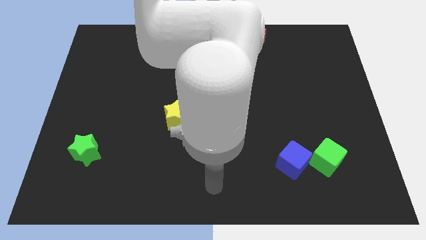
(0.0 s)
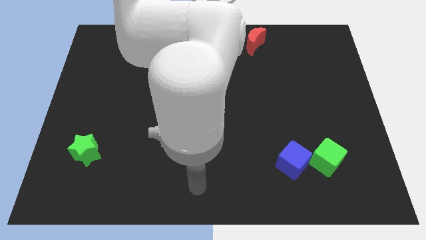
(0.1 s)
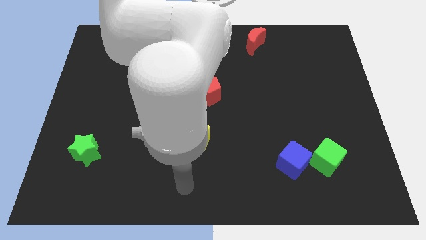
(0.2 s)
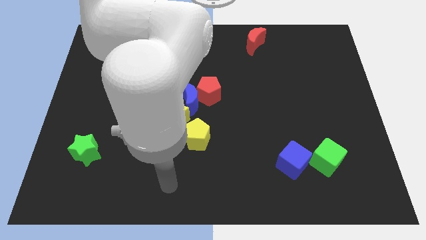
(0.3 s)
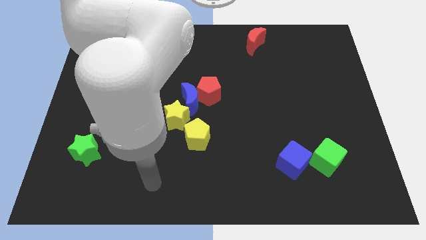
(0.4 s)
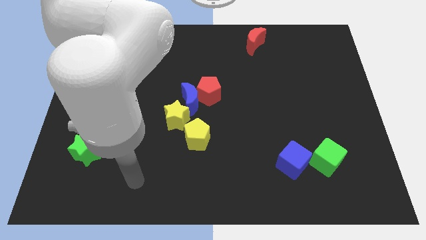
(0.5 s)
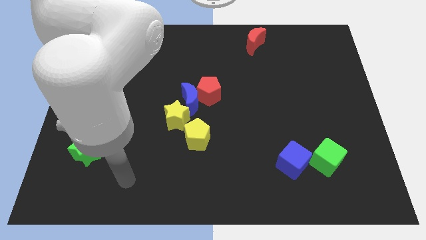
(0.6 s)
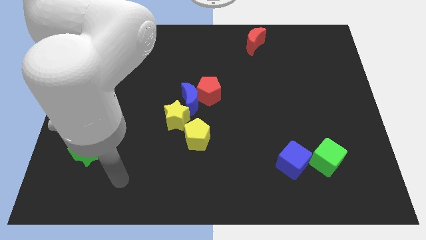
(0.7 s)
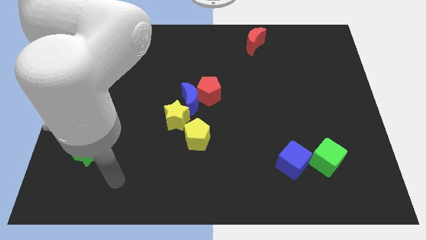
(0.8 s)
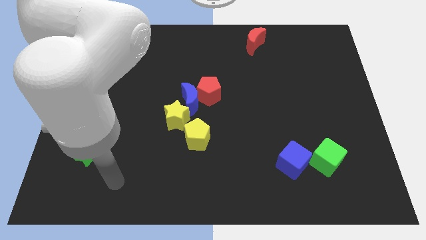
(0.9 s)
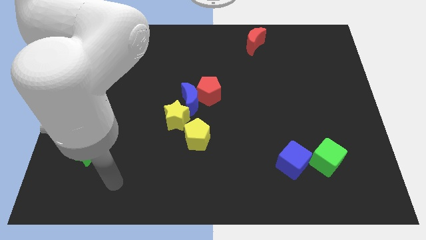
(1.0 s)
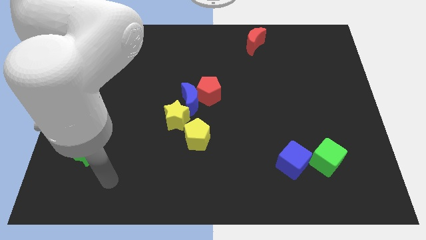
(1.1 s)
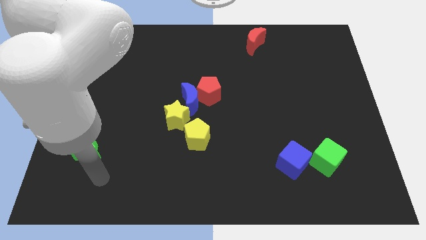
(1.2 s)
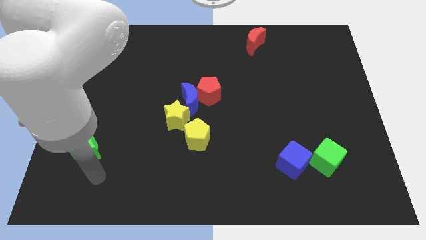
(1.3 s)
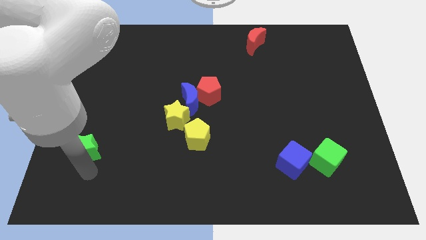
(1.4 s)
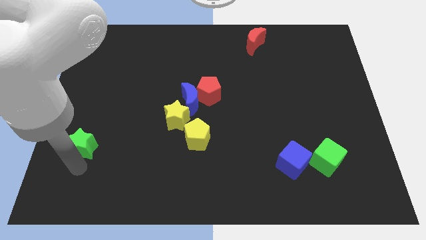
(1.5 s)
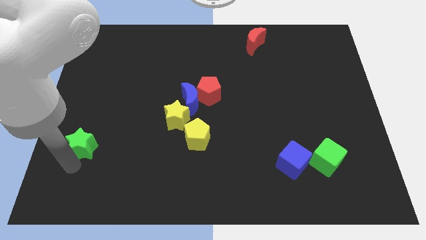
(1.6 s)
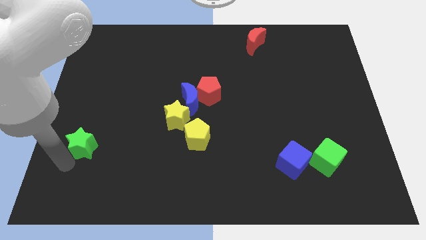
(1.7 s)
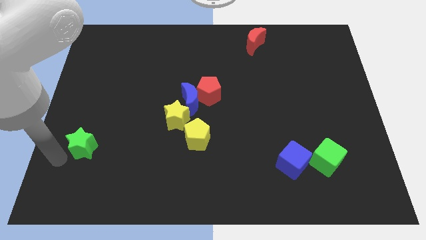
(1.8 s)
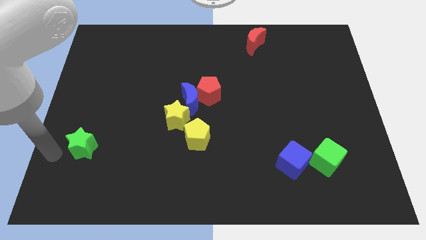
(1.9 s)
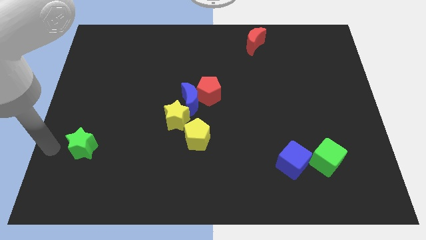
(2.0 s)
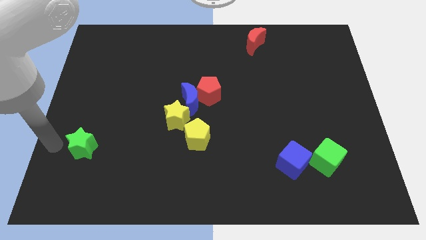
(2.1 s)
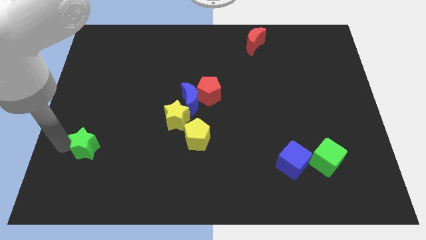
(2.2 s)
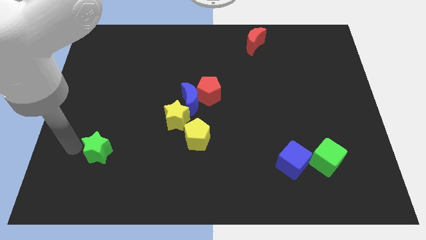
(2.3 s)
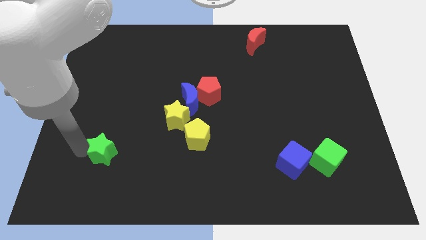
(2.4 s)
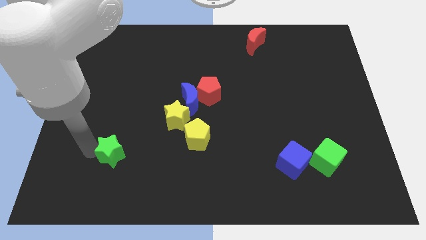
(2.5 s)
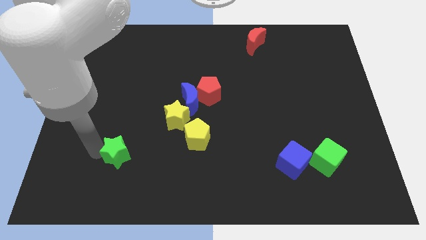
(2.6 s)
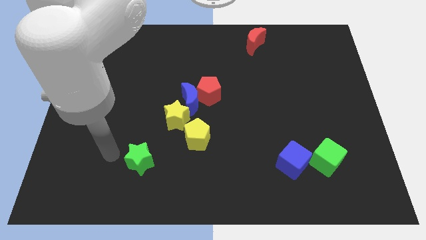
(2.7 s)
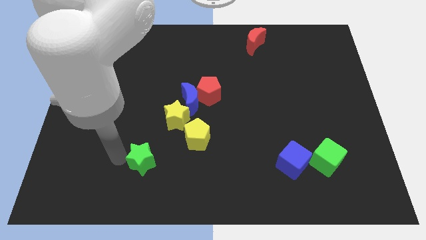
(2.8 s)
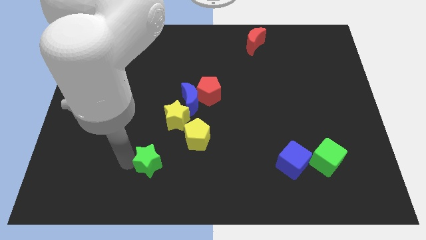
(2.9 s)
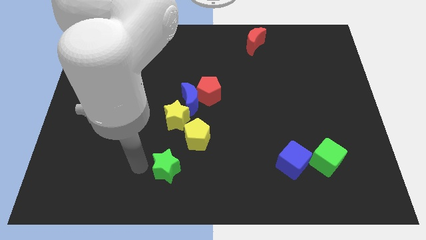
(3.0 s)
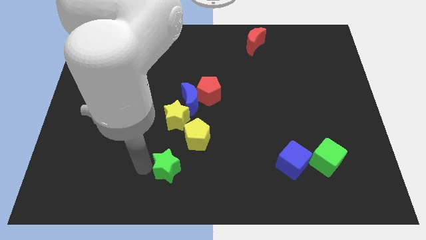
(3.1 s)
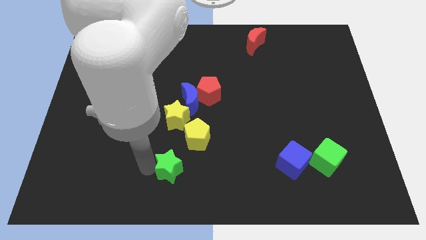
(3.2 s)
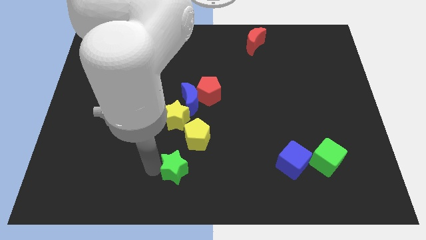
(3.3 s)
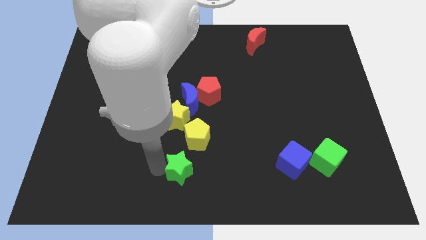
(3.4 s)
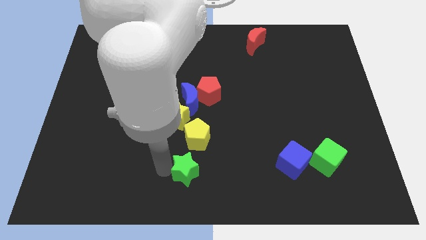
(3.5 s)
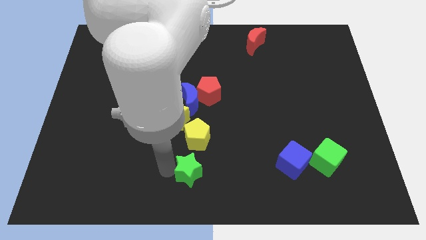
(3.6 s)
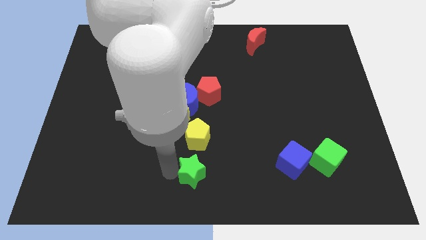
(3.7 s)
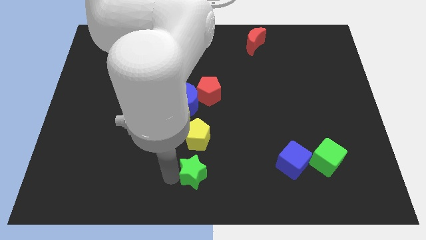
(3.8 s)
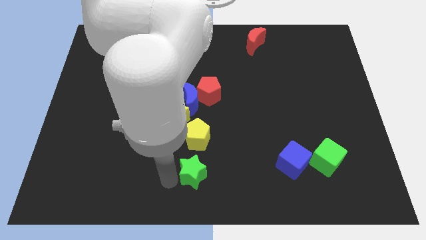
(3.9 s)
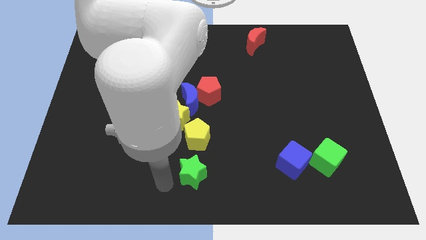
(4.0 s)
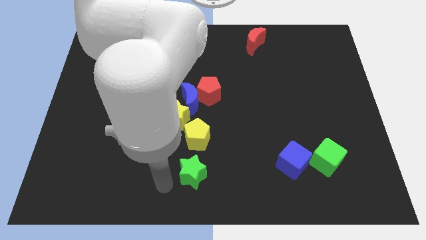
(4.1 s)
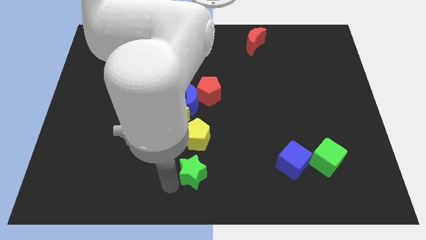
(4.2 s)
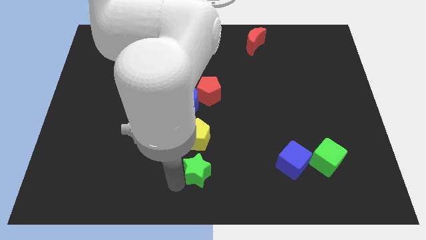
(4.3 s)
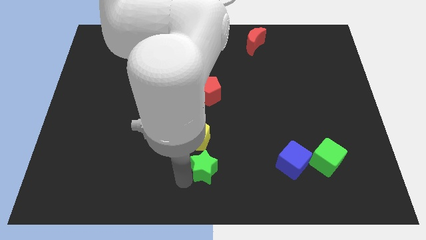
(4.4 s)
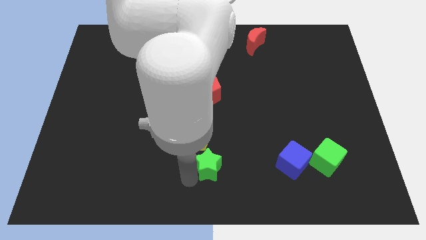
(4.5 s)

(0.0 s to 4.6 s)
push the green star towards the bottom center of the board

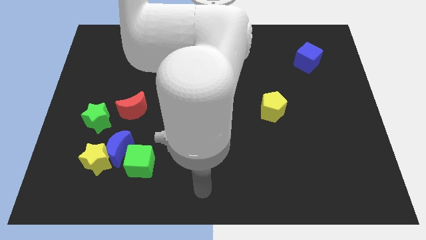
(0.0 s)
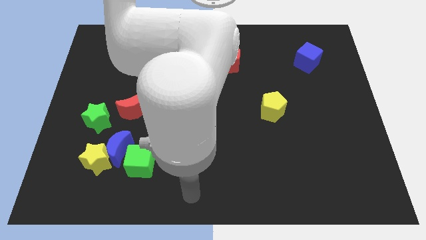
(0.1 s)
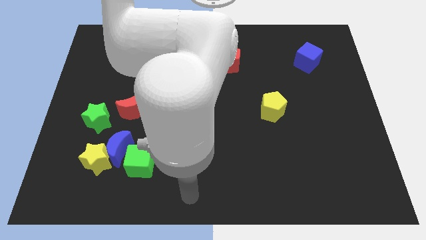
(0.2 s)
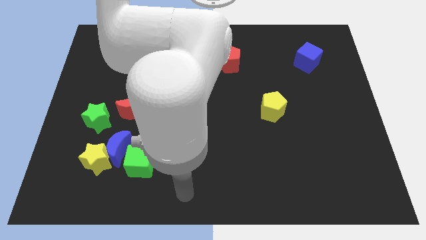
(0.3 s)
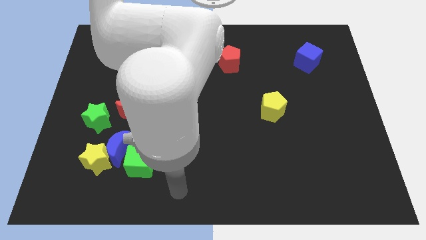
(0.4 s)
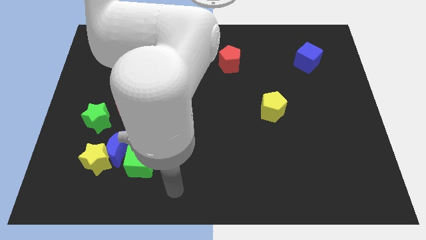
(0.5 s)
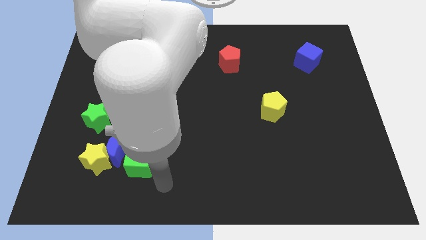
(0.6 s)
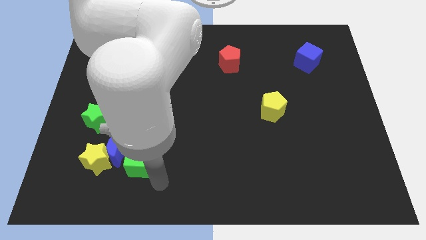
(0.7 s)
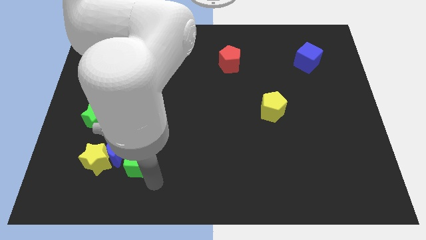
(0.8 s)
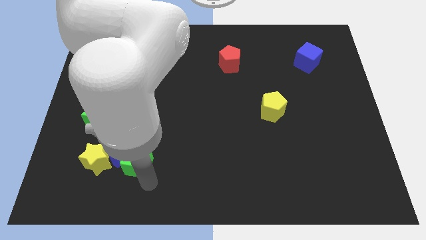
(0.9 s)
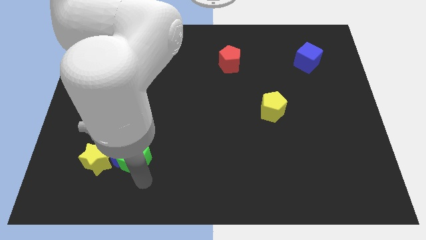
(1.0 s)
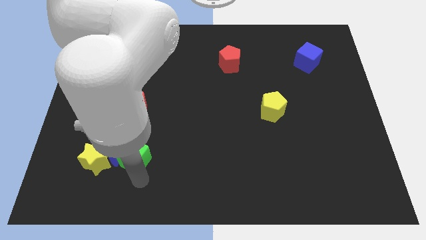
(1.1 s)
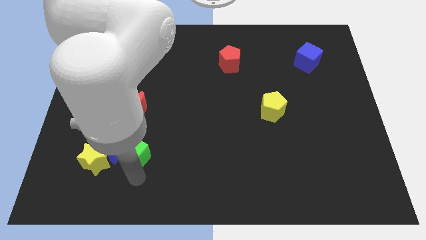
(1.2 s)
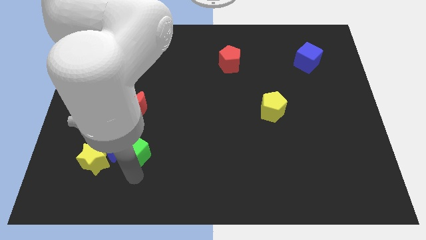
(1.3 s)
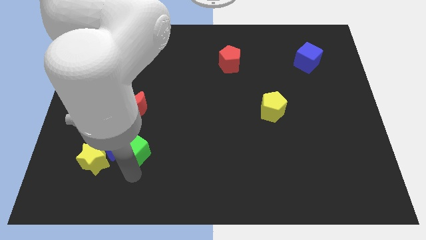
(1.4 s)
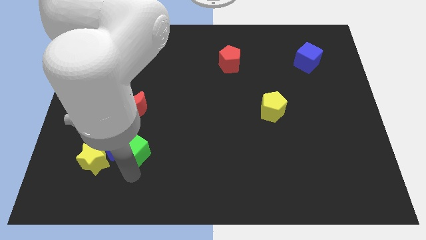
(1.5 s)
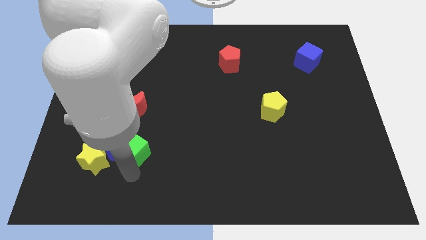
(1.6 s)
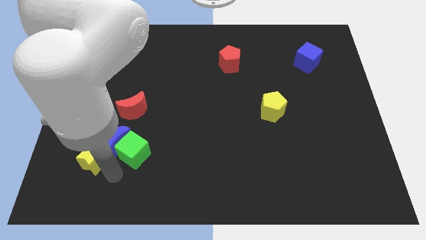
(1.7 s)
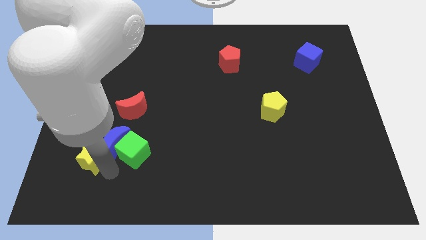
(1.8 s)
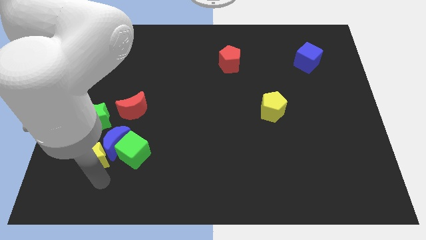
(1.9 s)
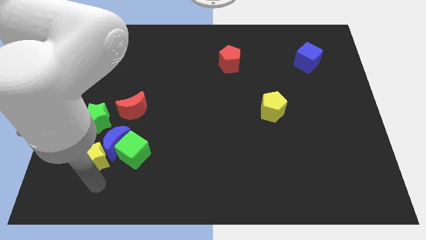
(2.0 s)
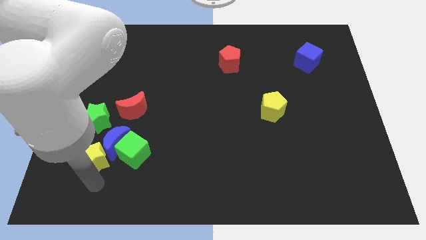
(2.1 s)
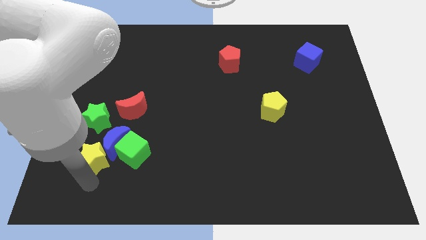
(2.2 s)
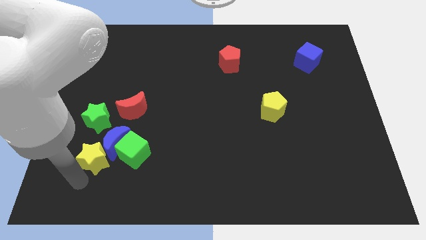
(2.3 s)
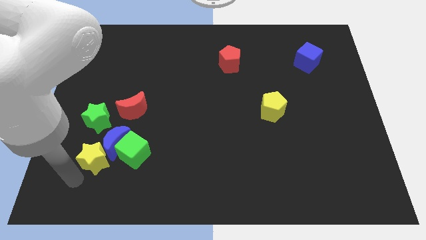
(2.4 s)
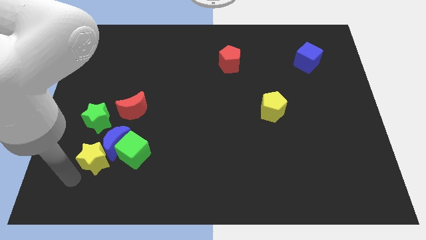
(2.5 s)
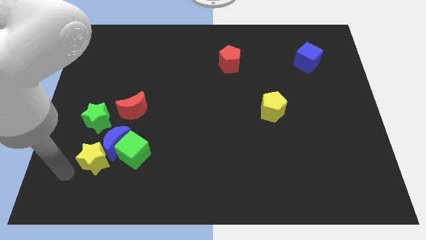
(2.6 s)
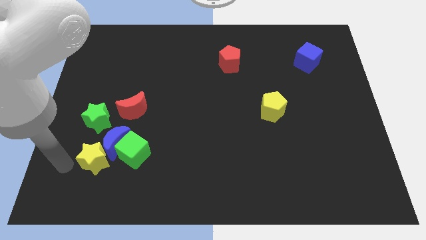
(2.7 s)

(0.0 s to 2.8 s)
move the green cube along with the blue crescent close to the green star

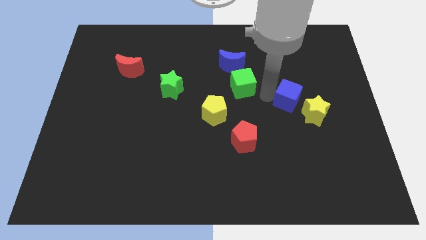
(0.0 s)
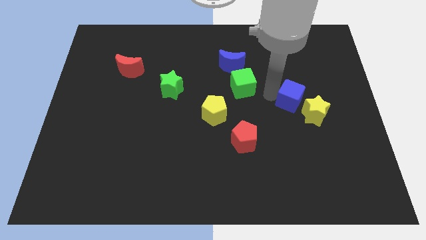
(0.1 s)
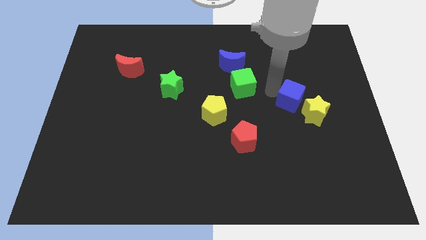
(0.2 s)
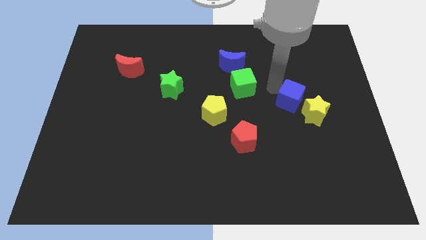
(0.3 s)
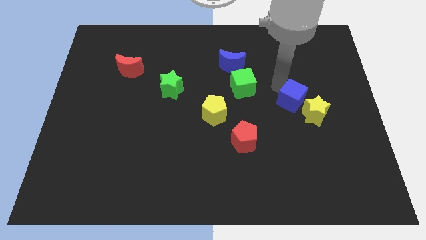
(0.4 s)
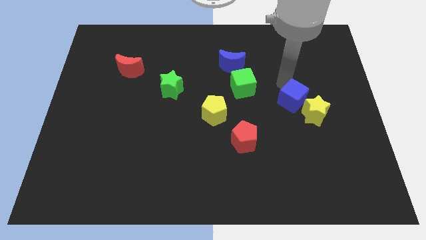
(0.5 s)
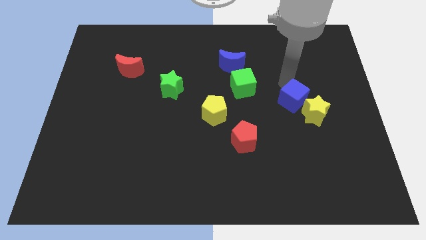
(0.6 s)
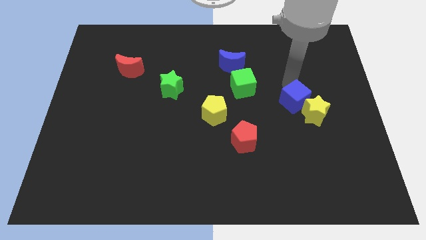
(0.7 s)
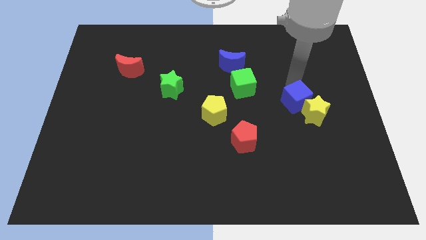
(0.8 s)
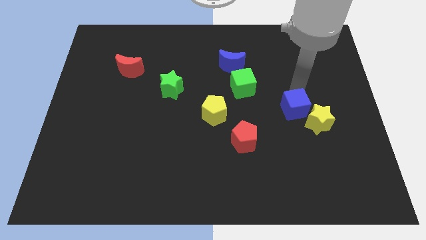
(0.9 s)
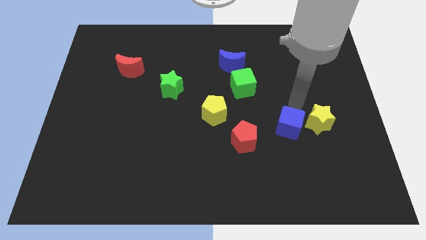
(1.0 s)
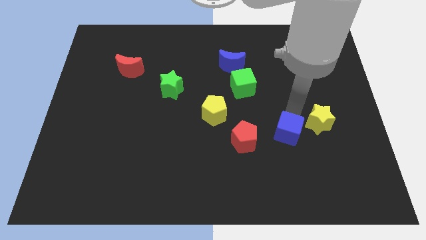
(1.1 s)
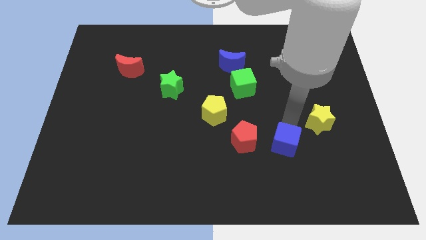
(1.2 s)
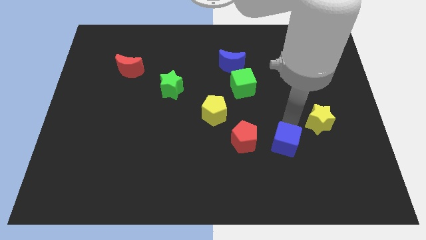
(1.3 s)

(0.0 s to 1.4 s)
put the blue cube to the right side of the red pentagon

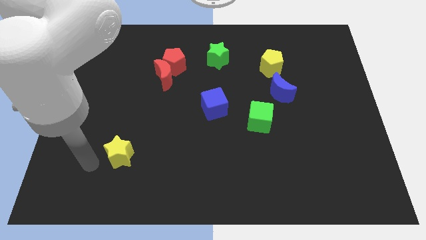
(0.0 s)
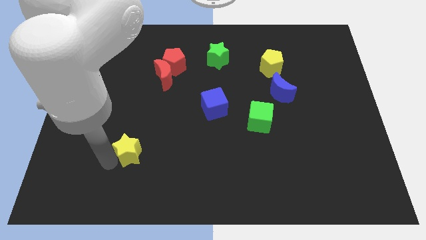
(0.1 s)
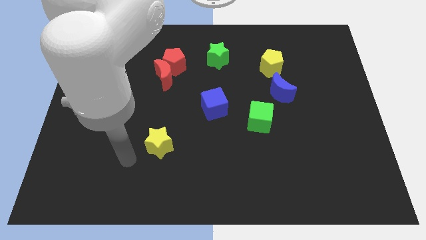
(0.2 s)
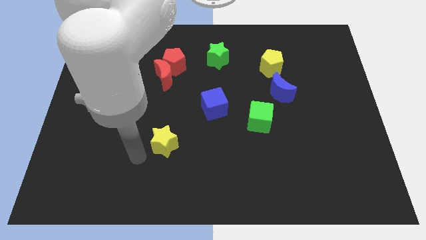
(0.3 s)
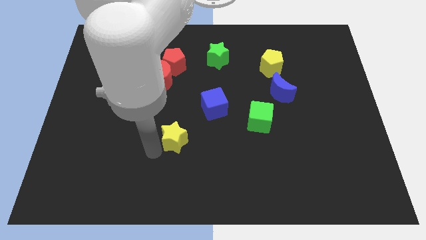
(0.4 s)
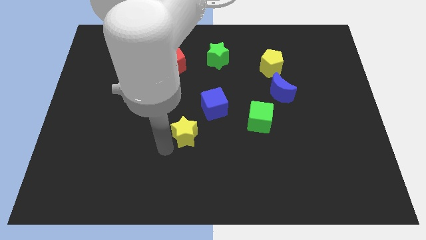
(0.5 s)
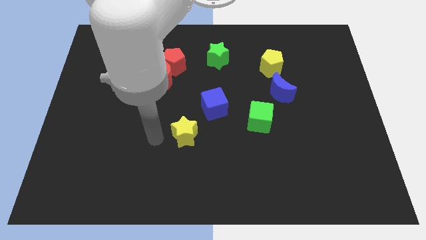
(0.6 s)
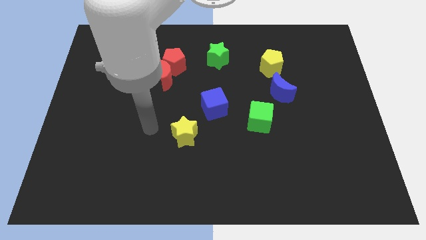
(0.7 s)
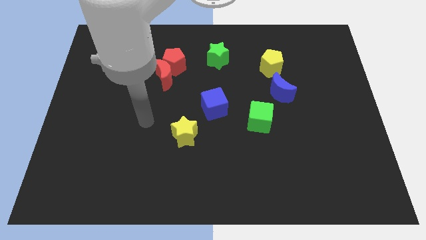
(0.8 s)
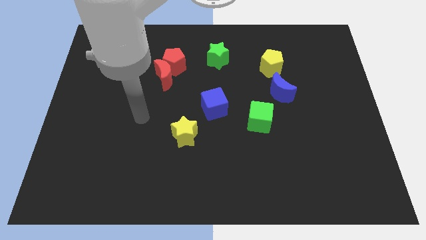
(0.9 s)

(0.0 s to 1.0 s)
put the yellow star diagonally to blue cube
